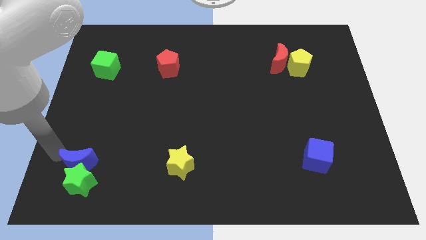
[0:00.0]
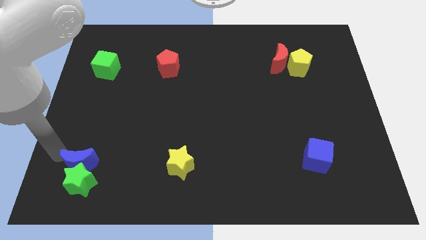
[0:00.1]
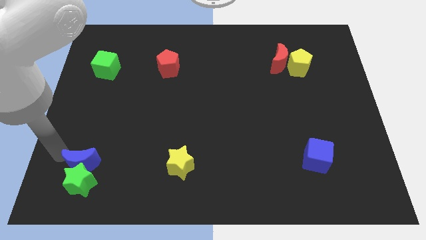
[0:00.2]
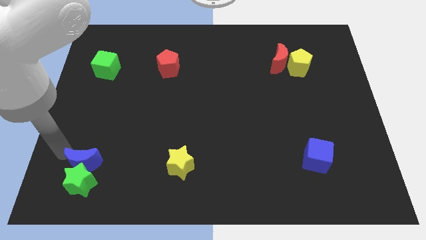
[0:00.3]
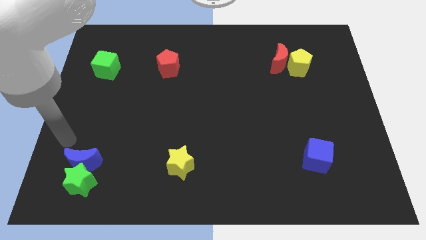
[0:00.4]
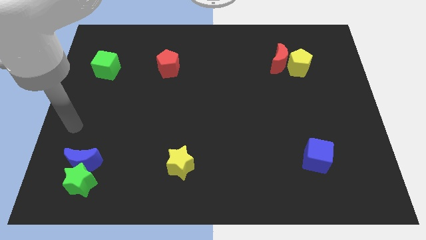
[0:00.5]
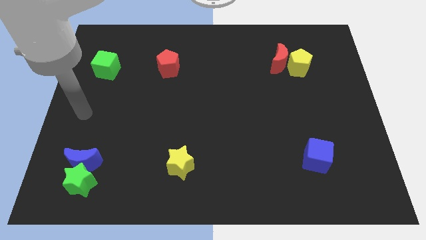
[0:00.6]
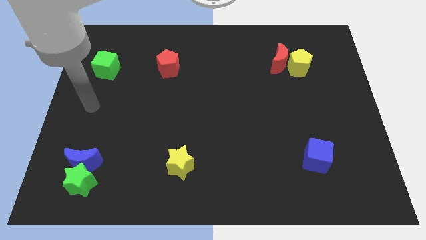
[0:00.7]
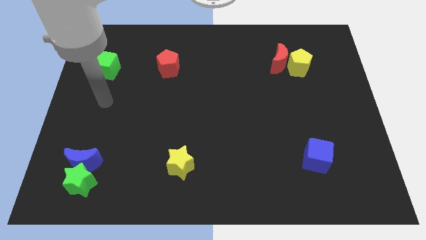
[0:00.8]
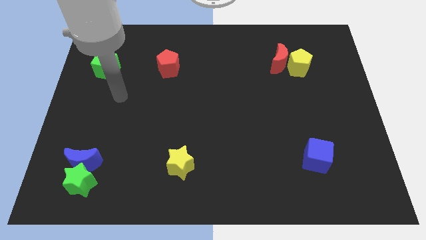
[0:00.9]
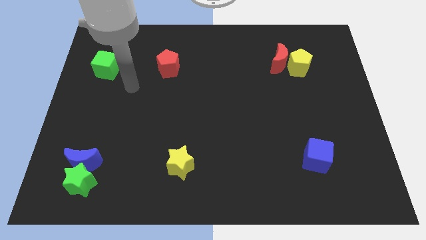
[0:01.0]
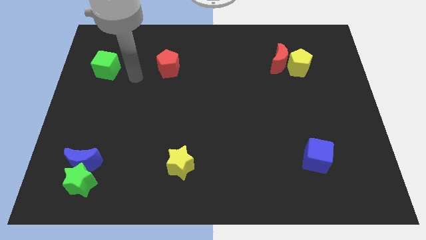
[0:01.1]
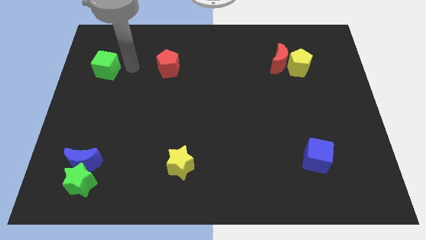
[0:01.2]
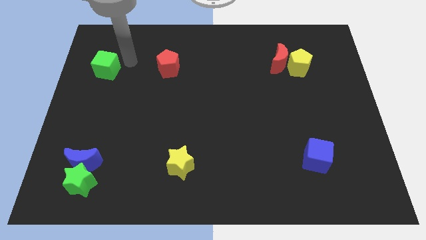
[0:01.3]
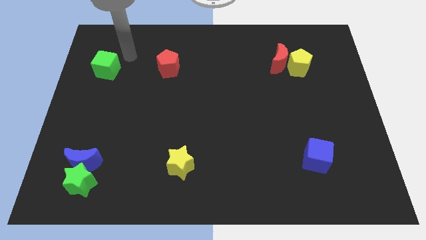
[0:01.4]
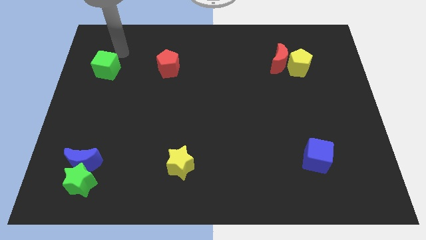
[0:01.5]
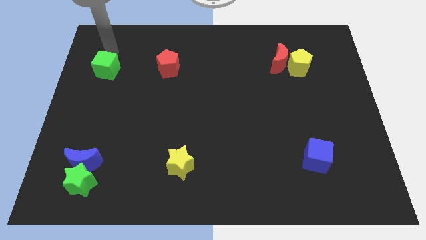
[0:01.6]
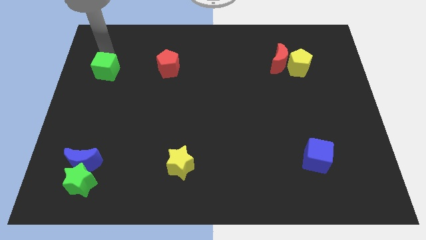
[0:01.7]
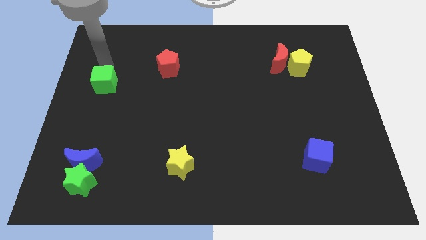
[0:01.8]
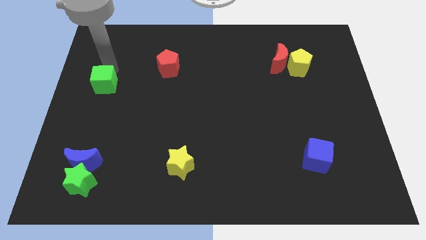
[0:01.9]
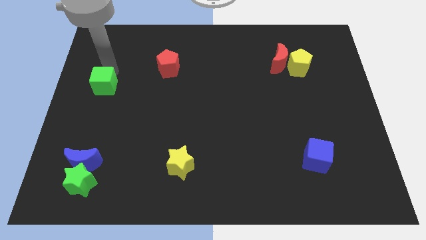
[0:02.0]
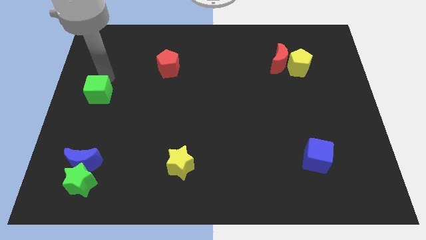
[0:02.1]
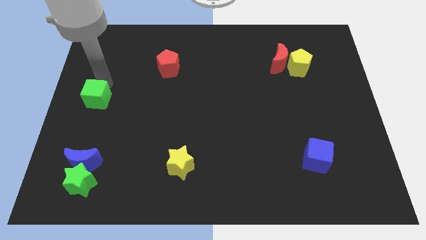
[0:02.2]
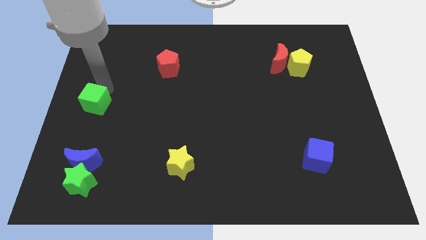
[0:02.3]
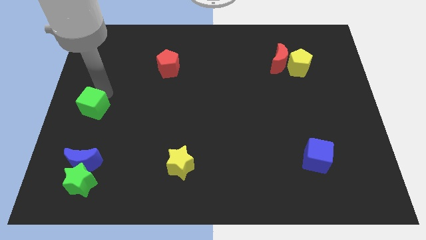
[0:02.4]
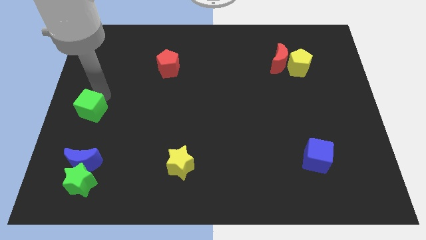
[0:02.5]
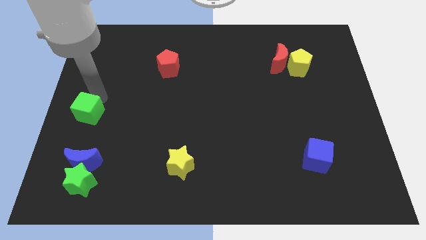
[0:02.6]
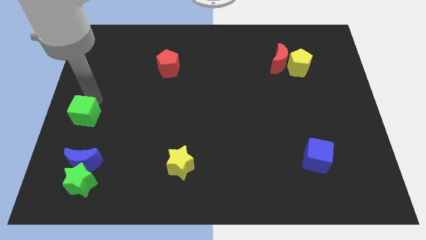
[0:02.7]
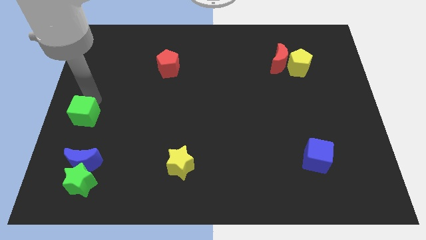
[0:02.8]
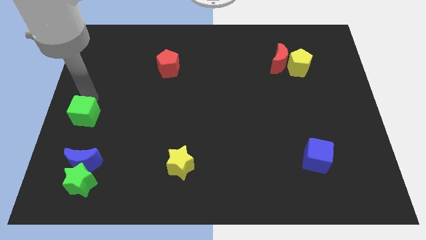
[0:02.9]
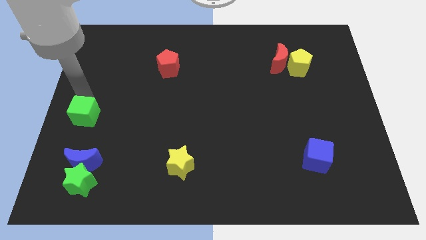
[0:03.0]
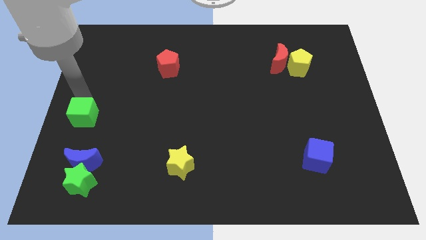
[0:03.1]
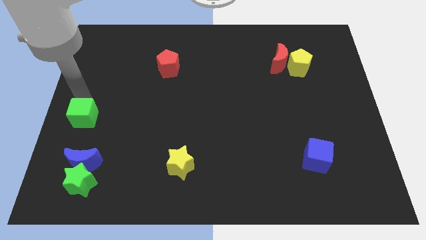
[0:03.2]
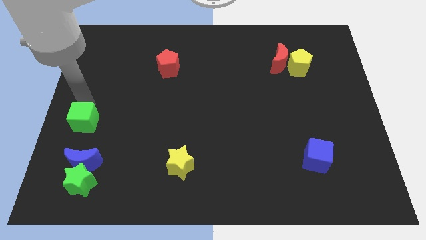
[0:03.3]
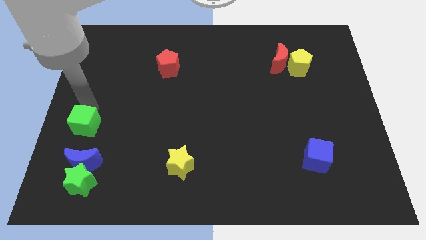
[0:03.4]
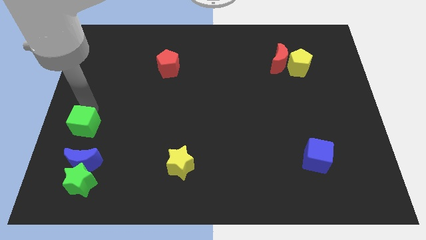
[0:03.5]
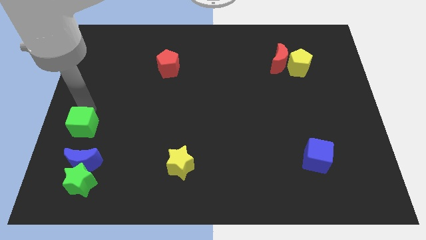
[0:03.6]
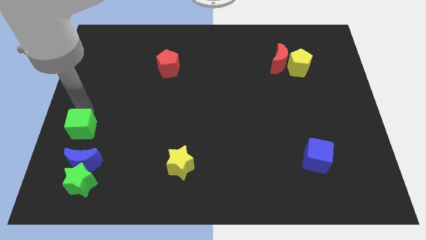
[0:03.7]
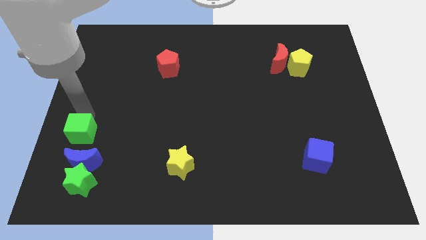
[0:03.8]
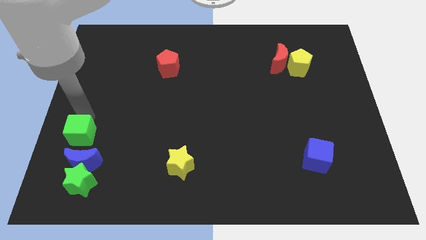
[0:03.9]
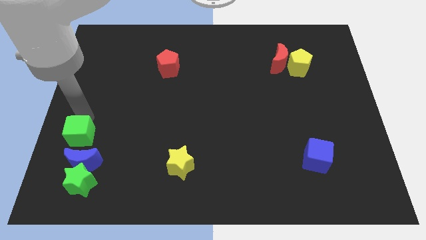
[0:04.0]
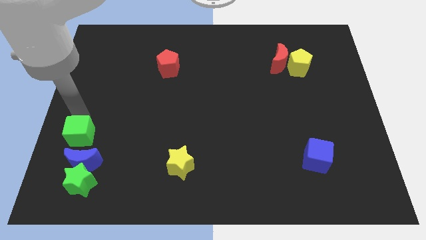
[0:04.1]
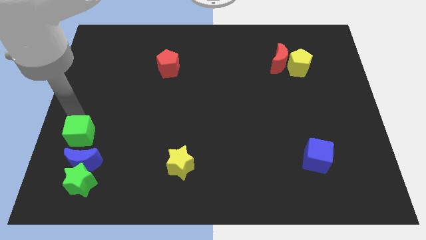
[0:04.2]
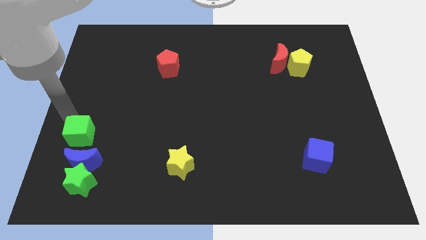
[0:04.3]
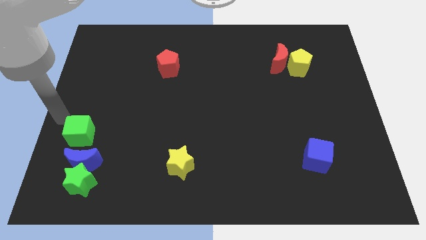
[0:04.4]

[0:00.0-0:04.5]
place the green cube above the blue moon

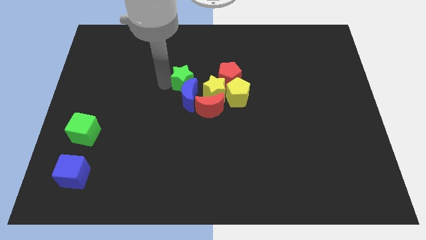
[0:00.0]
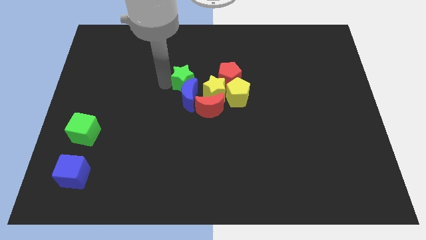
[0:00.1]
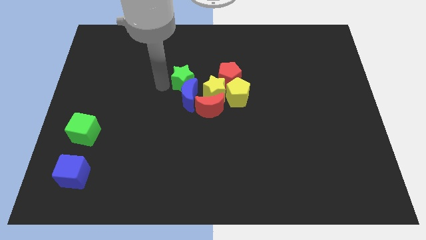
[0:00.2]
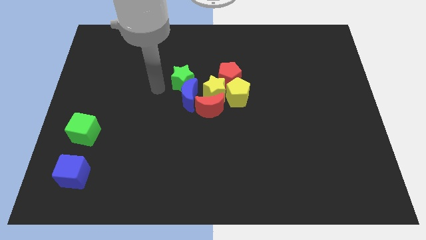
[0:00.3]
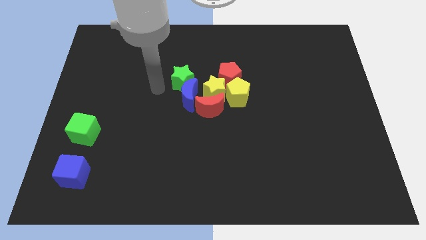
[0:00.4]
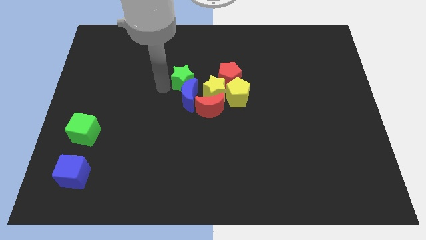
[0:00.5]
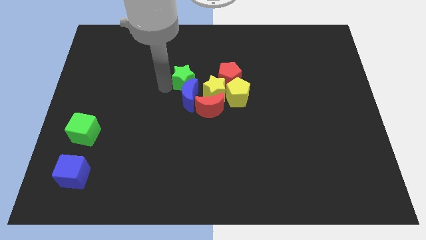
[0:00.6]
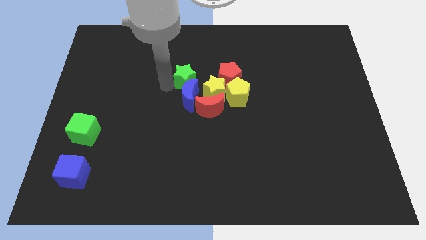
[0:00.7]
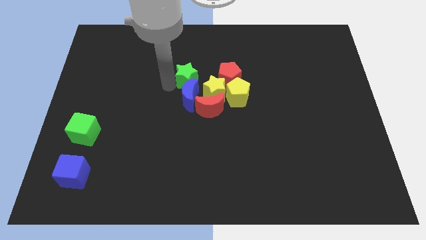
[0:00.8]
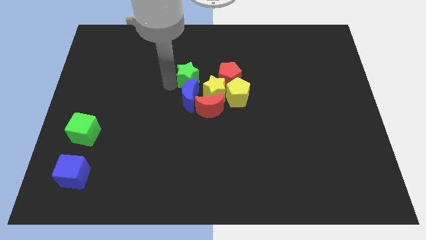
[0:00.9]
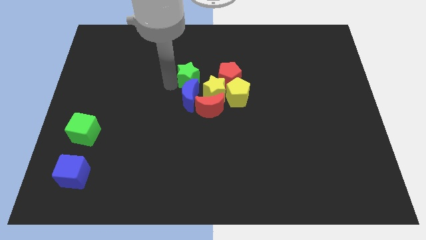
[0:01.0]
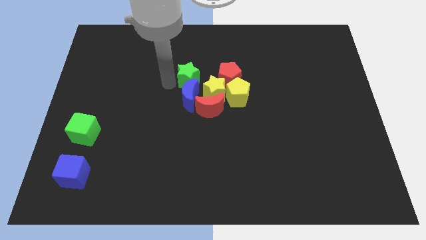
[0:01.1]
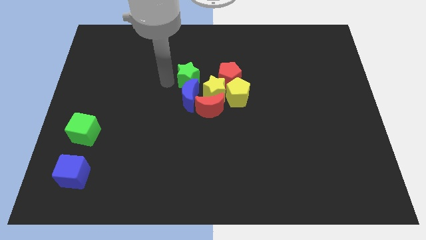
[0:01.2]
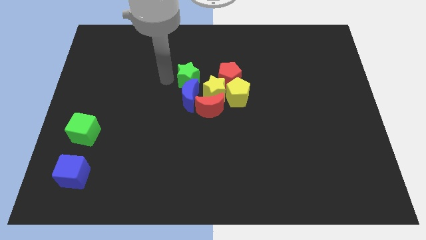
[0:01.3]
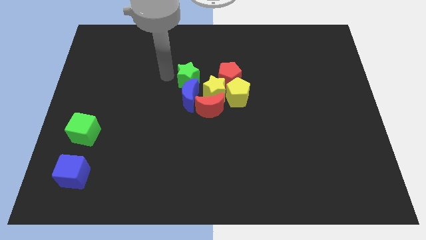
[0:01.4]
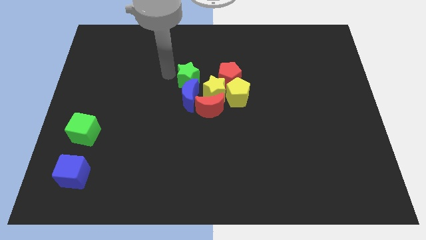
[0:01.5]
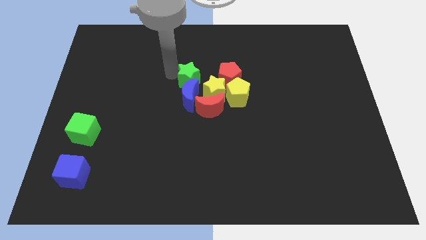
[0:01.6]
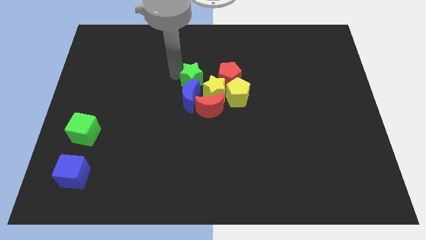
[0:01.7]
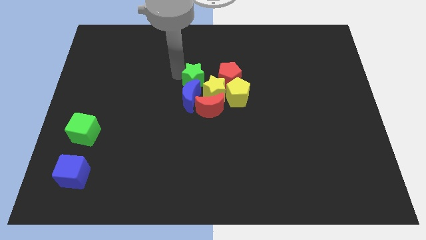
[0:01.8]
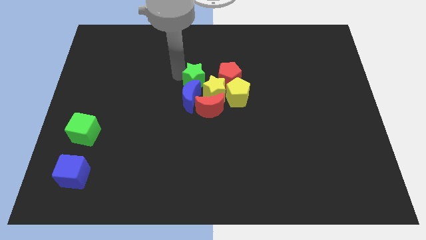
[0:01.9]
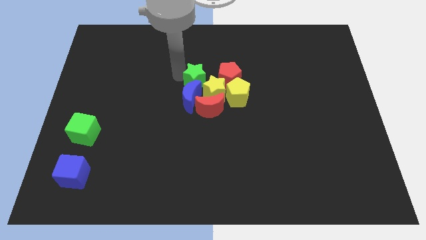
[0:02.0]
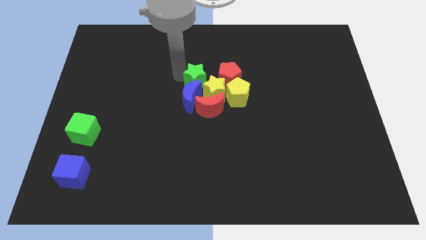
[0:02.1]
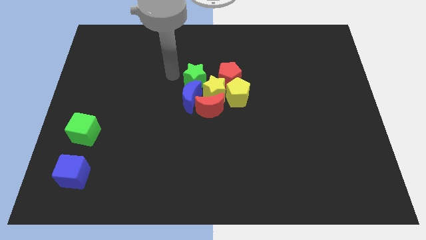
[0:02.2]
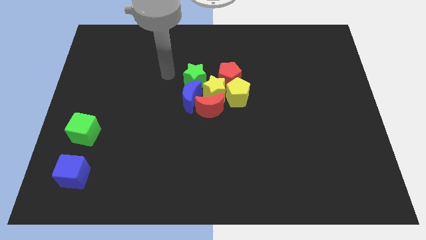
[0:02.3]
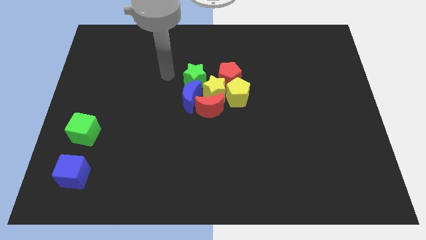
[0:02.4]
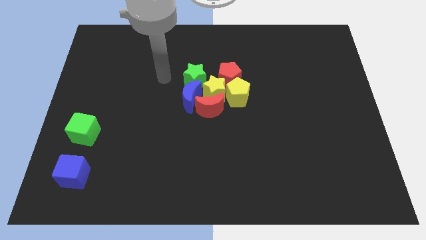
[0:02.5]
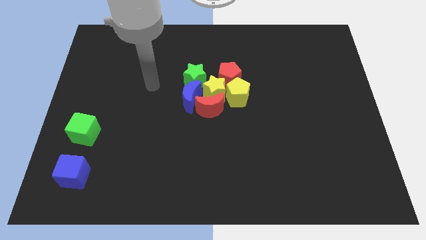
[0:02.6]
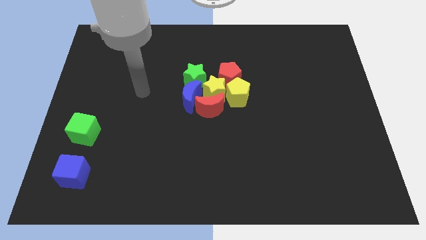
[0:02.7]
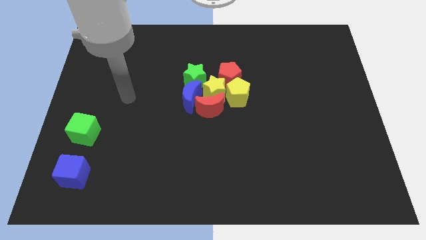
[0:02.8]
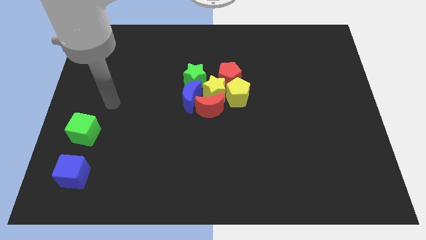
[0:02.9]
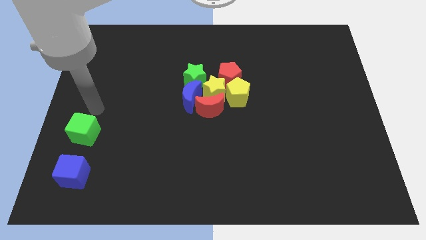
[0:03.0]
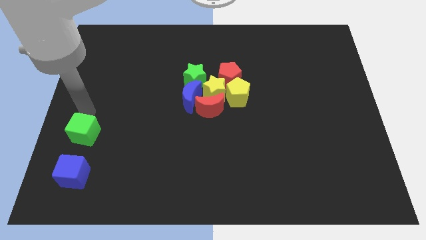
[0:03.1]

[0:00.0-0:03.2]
push green star and blue crescent into yellow star

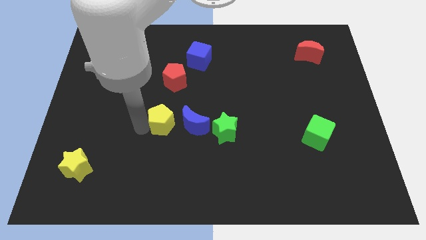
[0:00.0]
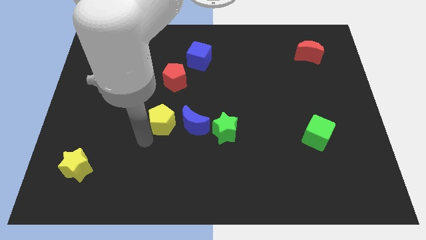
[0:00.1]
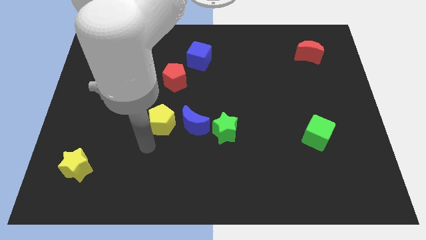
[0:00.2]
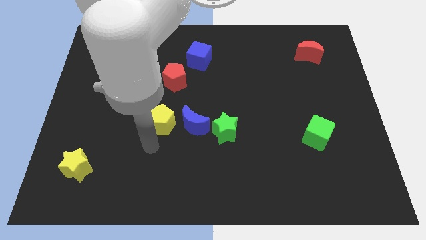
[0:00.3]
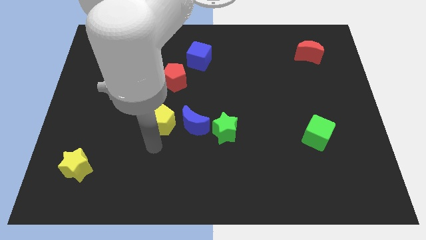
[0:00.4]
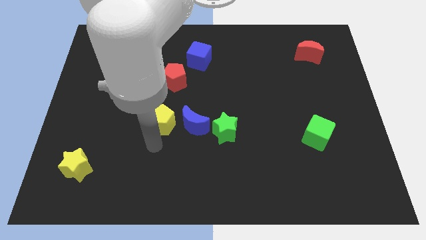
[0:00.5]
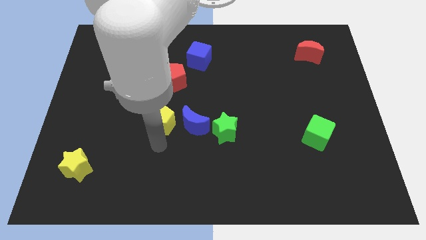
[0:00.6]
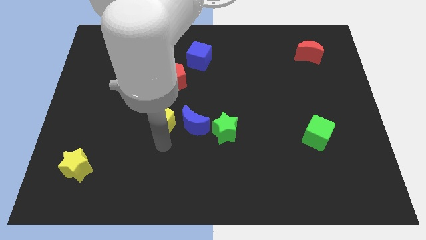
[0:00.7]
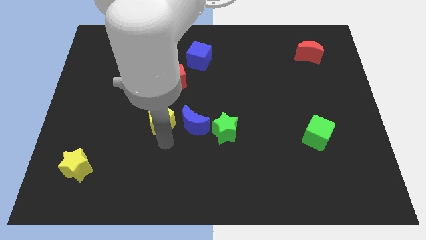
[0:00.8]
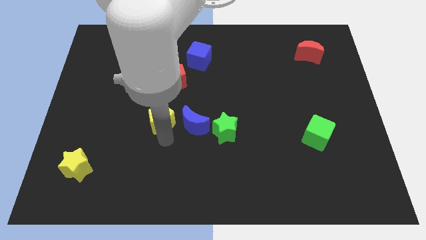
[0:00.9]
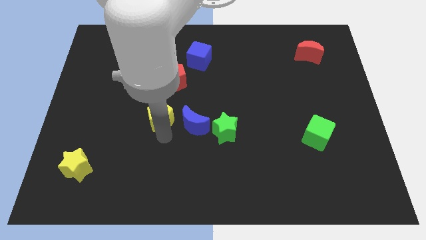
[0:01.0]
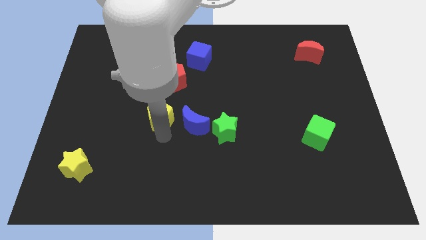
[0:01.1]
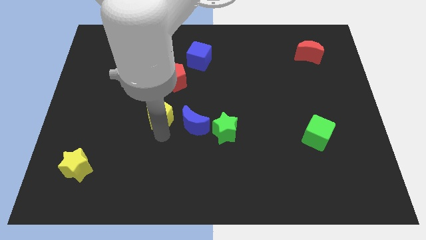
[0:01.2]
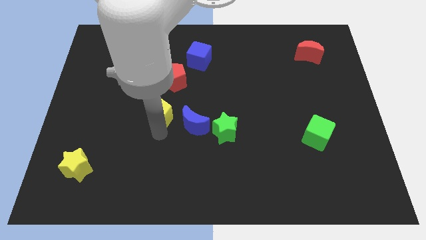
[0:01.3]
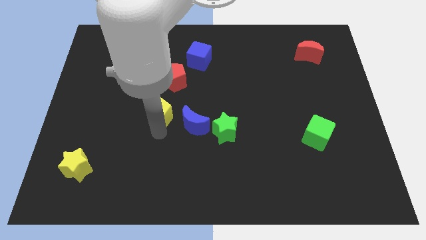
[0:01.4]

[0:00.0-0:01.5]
move the yellow pentagon below the red pentagon
